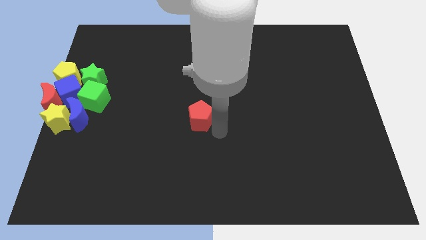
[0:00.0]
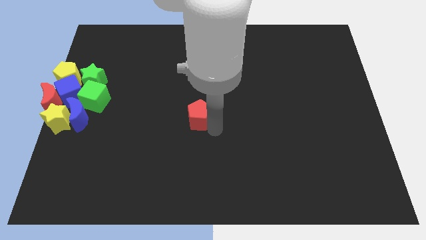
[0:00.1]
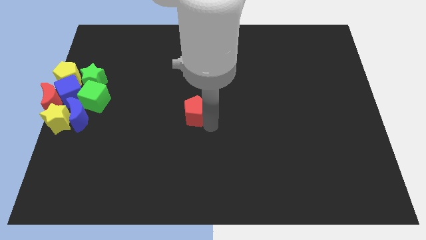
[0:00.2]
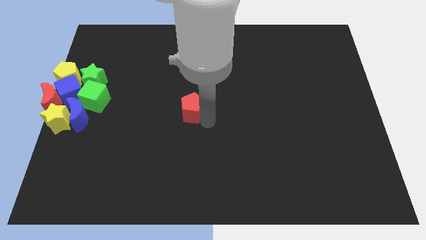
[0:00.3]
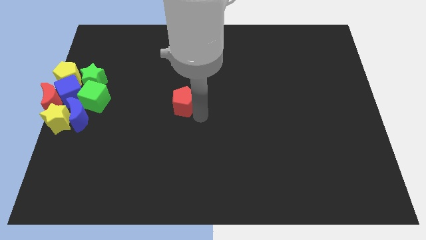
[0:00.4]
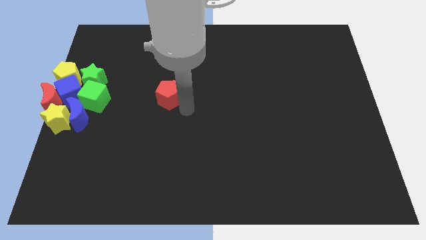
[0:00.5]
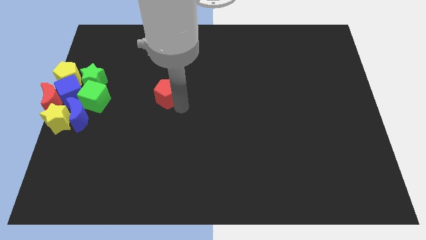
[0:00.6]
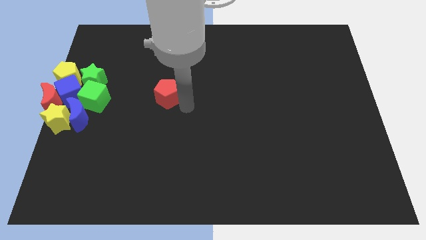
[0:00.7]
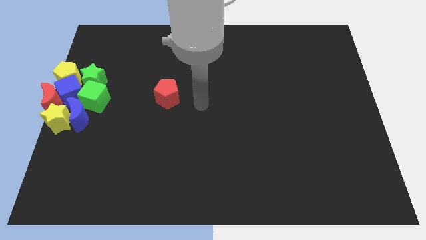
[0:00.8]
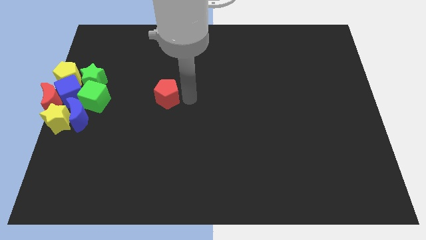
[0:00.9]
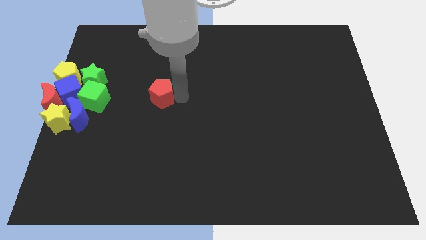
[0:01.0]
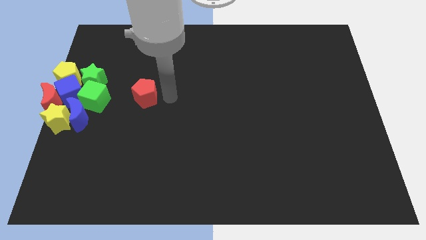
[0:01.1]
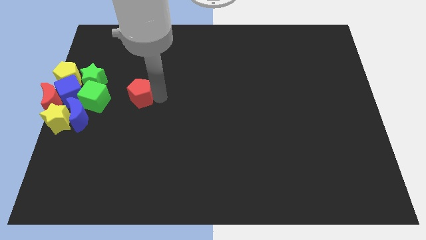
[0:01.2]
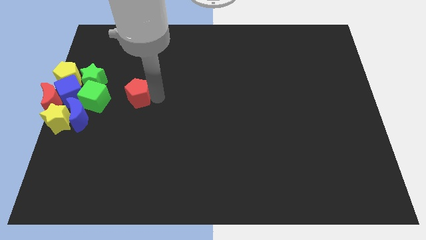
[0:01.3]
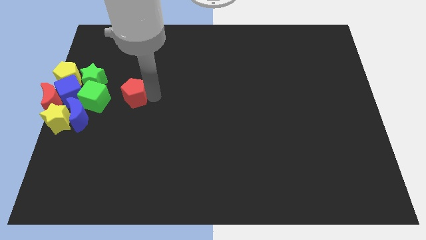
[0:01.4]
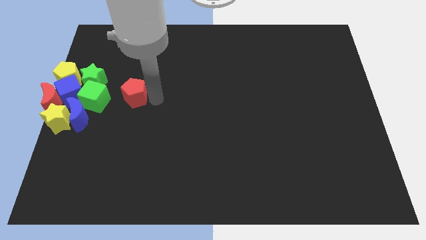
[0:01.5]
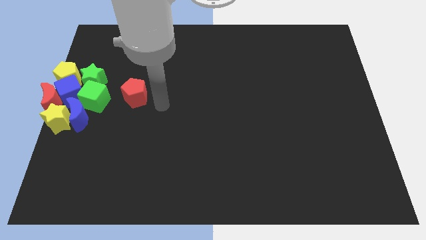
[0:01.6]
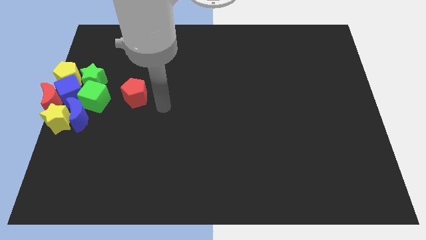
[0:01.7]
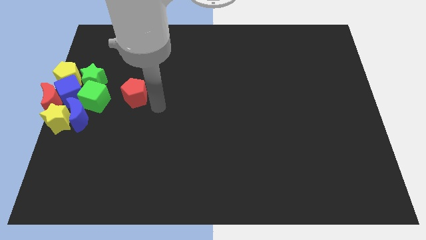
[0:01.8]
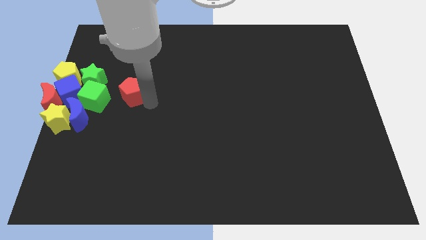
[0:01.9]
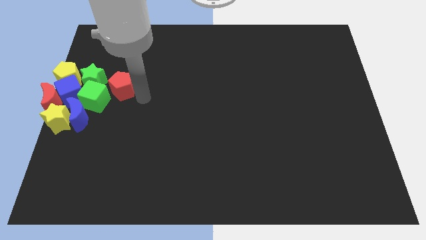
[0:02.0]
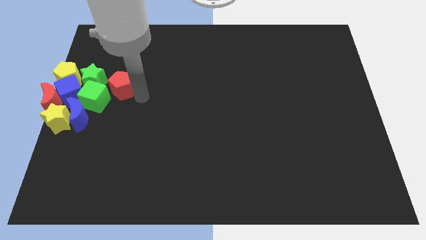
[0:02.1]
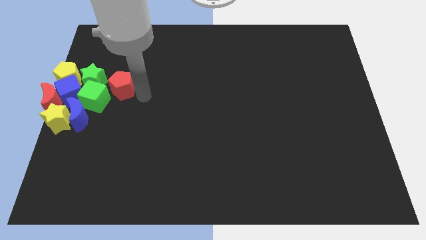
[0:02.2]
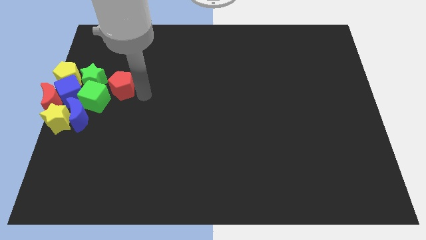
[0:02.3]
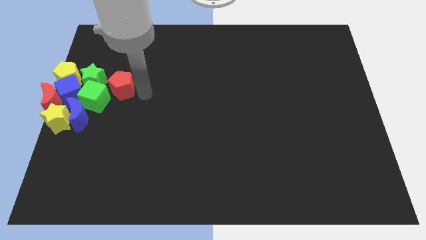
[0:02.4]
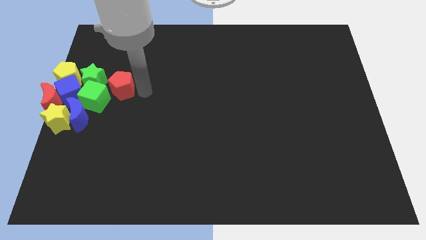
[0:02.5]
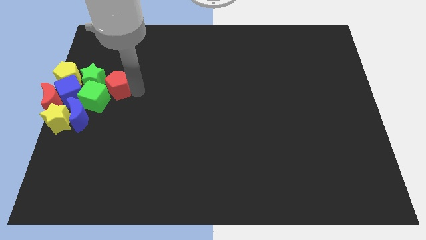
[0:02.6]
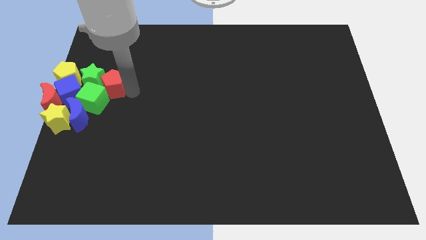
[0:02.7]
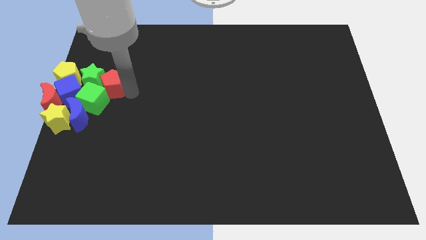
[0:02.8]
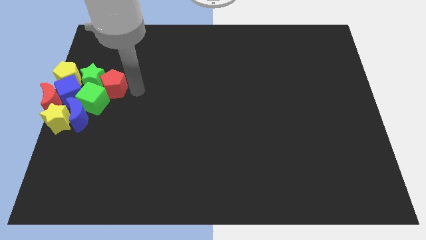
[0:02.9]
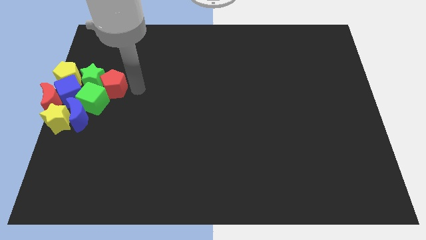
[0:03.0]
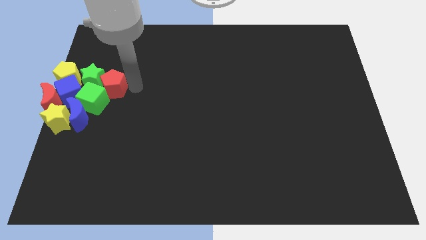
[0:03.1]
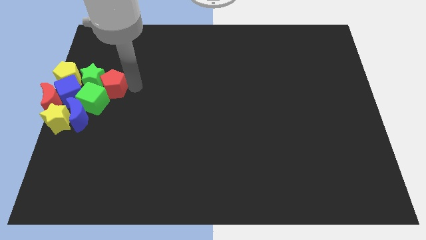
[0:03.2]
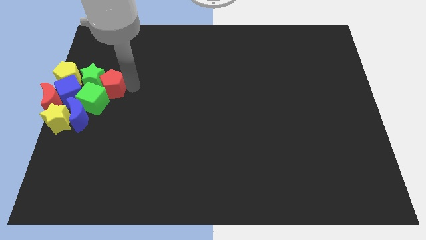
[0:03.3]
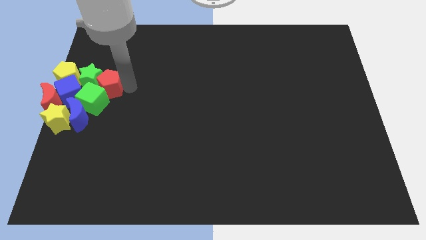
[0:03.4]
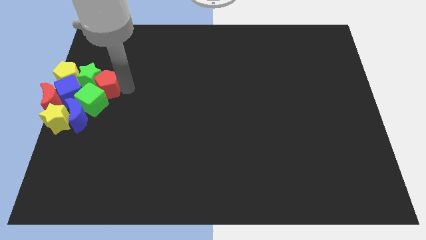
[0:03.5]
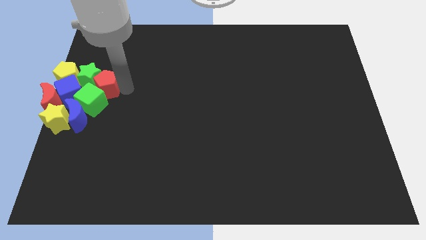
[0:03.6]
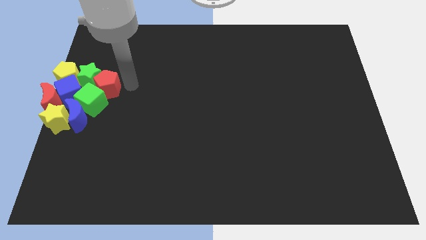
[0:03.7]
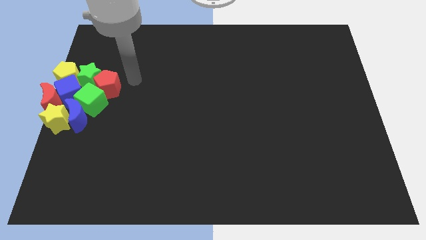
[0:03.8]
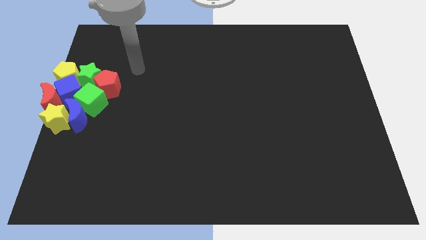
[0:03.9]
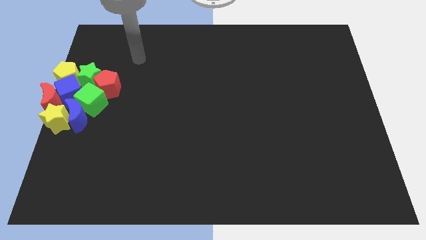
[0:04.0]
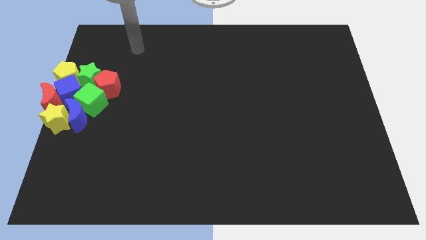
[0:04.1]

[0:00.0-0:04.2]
place red pentagon in between the green blocks

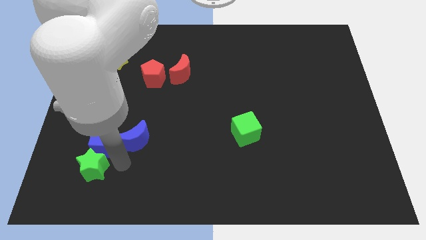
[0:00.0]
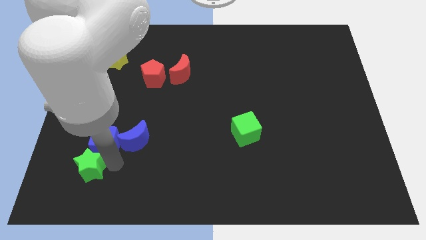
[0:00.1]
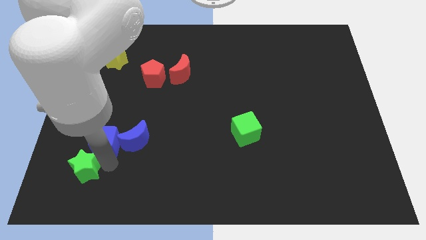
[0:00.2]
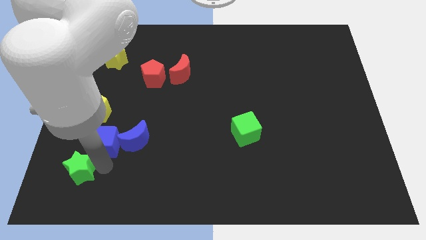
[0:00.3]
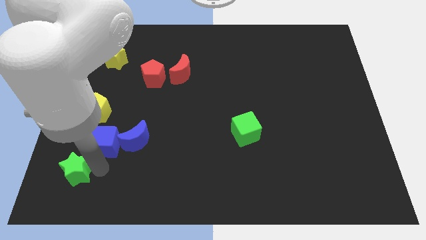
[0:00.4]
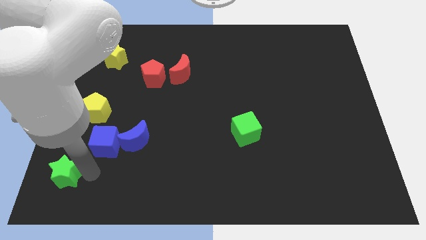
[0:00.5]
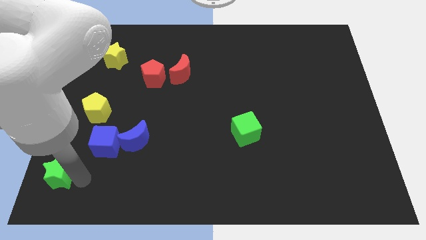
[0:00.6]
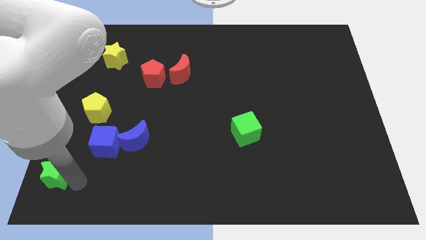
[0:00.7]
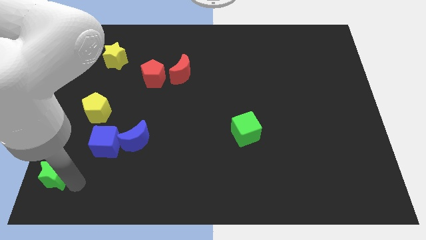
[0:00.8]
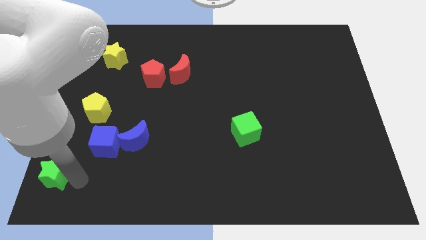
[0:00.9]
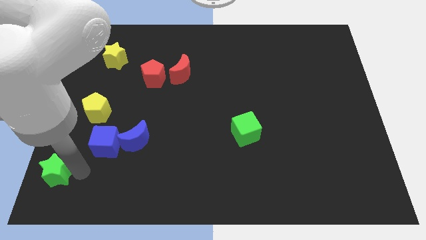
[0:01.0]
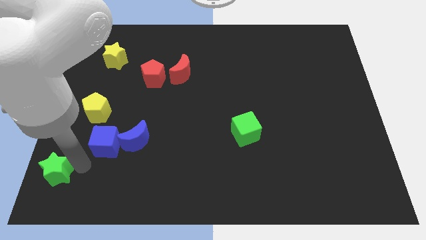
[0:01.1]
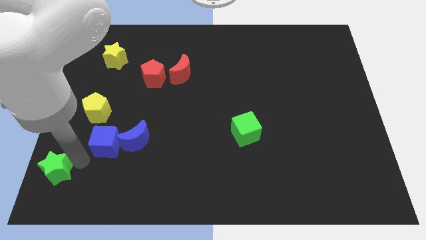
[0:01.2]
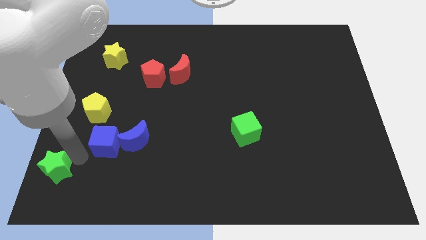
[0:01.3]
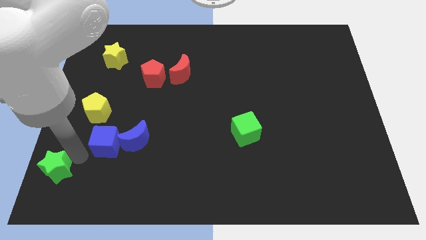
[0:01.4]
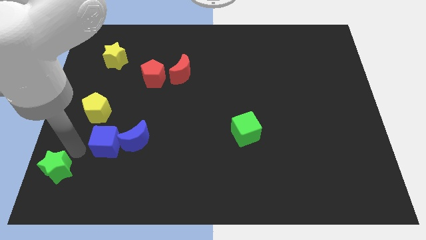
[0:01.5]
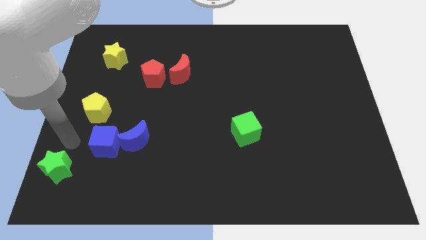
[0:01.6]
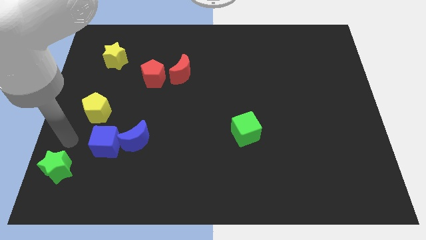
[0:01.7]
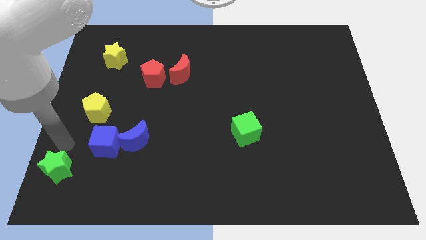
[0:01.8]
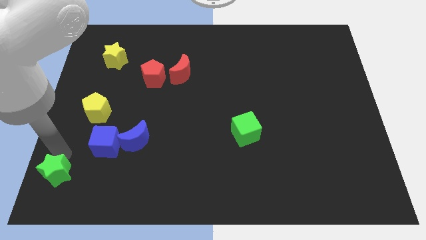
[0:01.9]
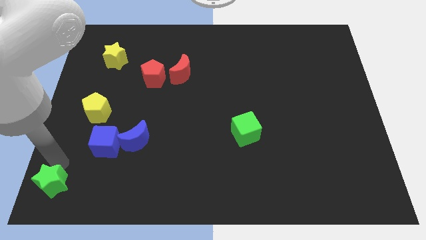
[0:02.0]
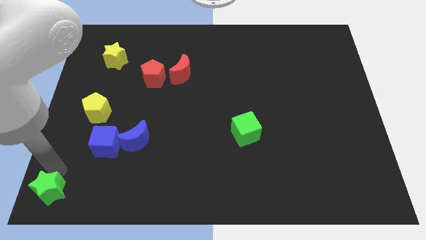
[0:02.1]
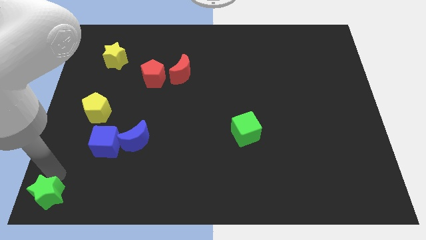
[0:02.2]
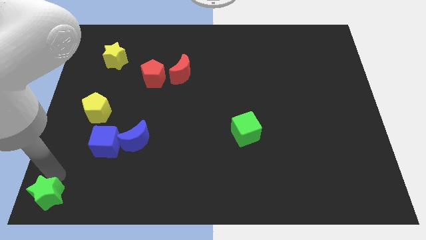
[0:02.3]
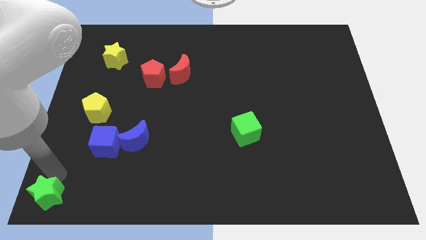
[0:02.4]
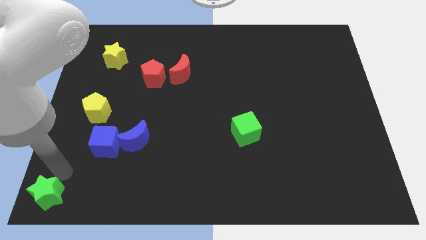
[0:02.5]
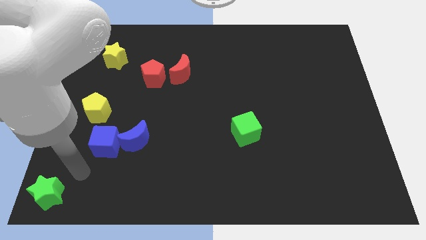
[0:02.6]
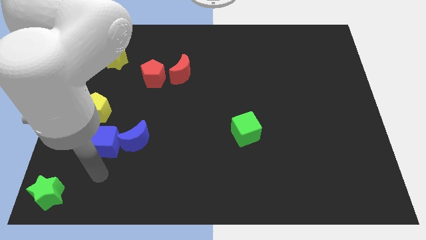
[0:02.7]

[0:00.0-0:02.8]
place green star towards bottom left corner

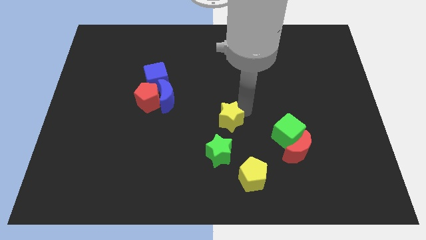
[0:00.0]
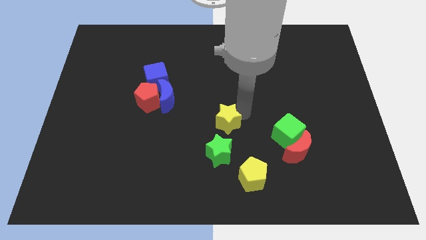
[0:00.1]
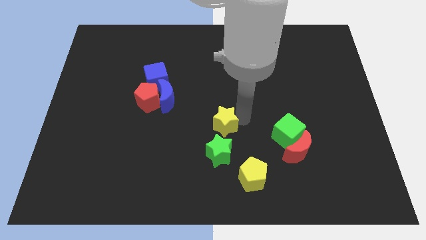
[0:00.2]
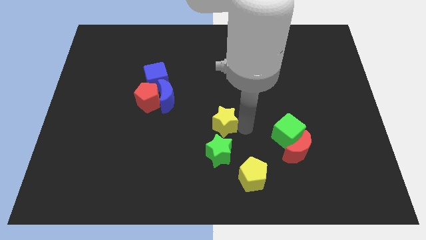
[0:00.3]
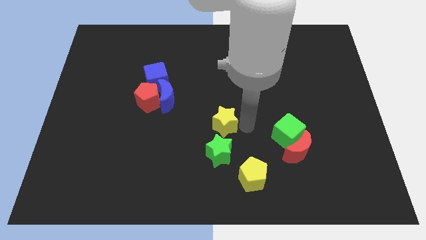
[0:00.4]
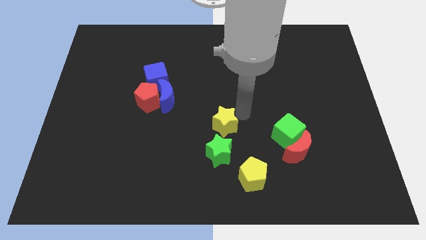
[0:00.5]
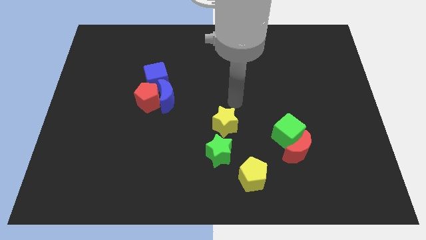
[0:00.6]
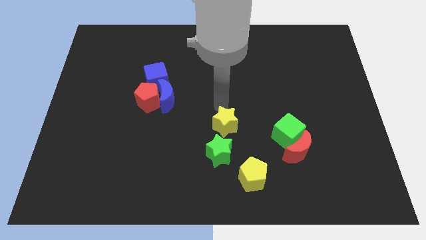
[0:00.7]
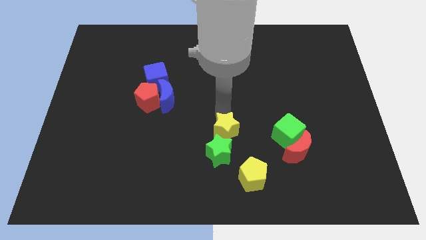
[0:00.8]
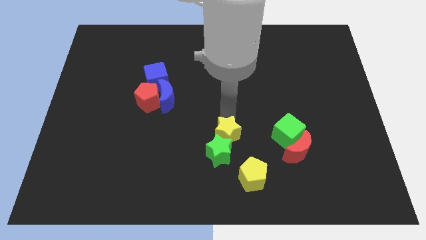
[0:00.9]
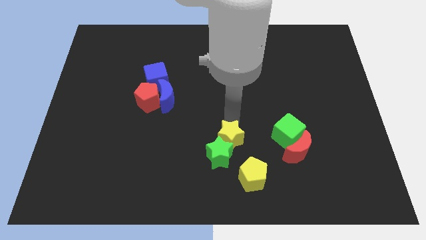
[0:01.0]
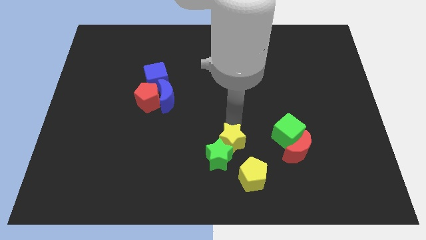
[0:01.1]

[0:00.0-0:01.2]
push the yellow star into the green star

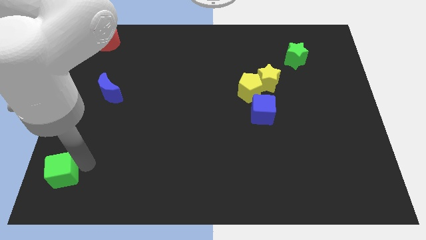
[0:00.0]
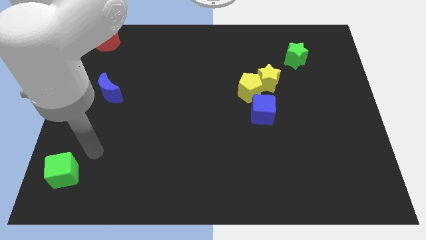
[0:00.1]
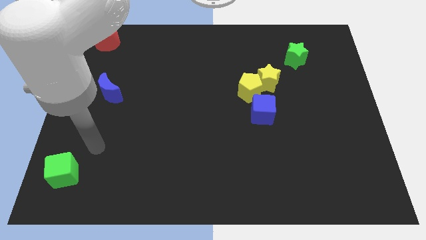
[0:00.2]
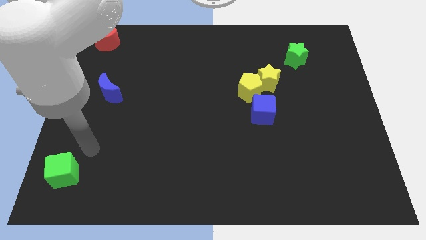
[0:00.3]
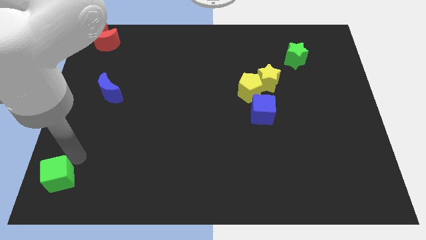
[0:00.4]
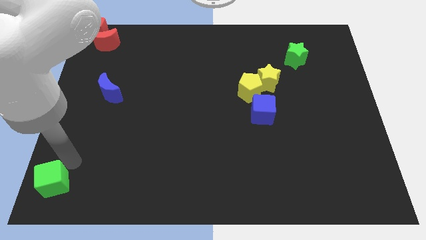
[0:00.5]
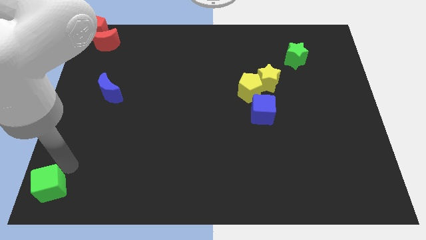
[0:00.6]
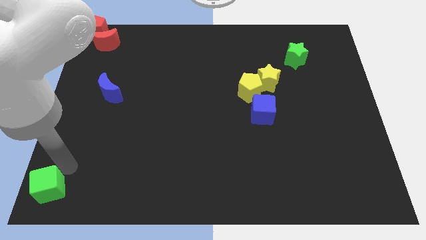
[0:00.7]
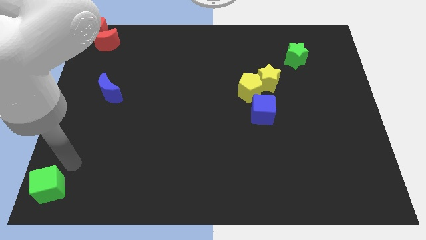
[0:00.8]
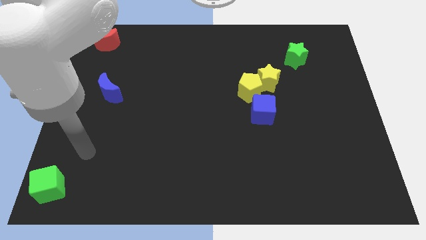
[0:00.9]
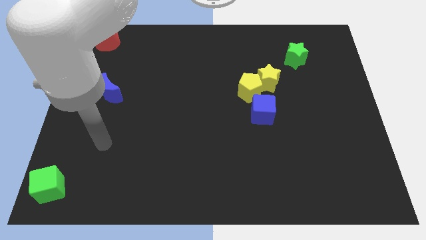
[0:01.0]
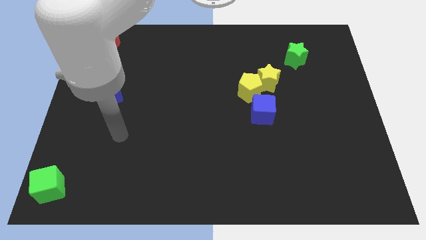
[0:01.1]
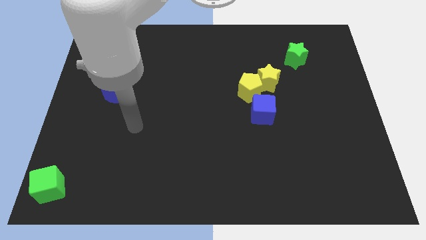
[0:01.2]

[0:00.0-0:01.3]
move the green cube to the bottom left corner of the board
